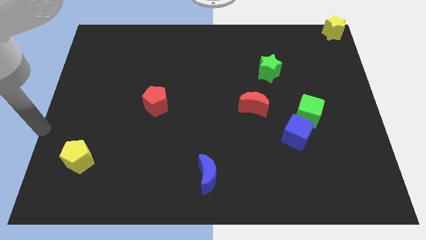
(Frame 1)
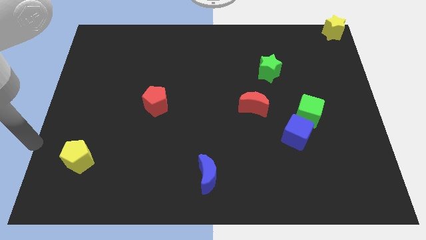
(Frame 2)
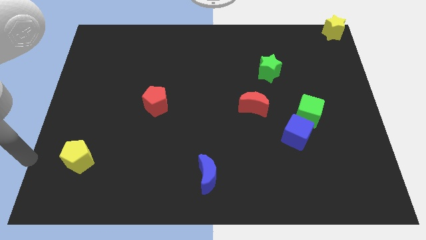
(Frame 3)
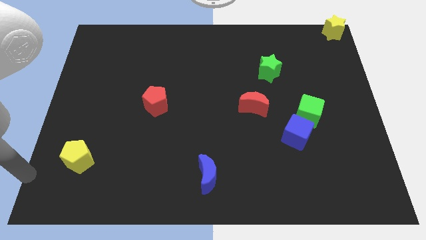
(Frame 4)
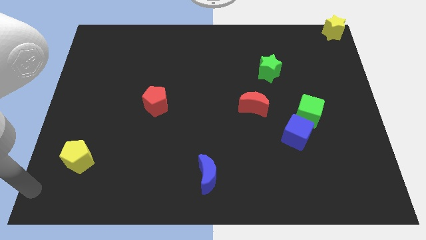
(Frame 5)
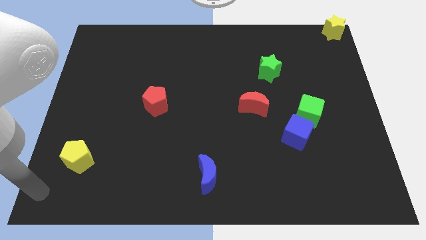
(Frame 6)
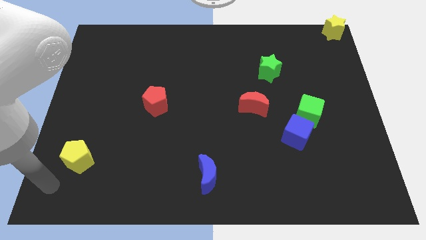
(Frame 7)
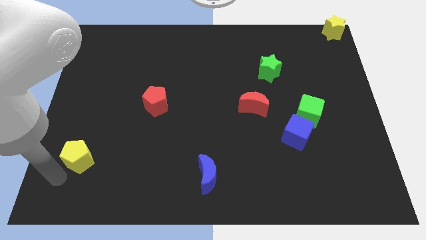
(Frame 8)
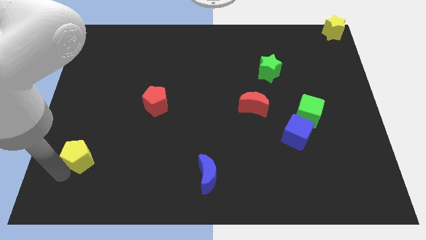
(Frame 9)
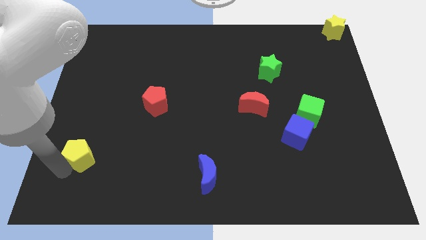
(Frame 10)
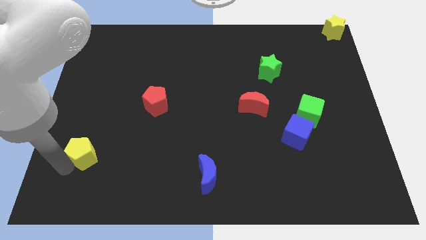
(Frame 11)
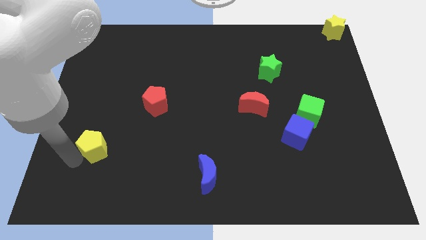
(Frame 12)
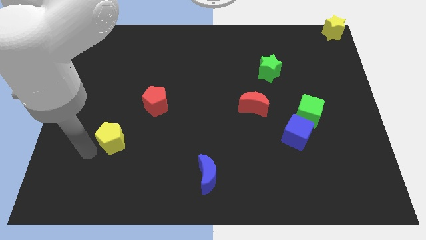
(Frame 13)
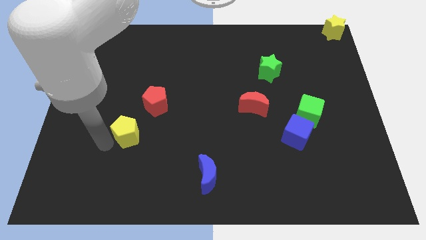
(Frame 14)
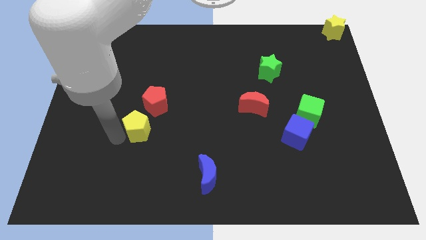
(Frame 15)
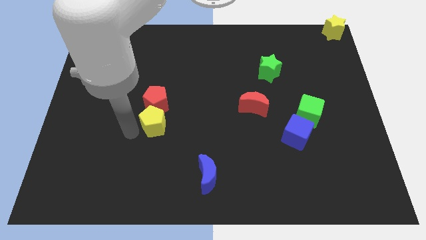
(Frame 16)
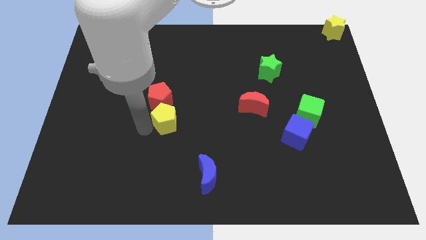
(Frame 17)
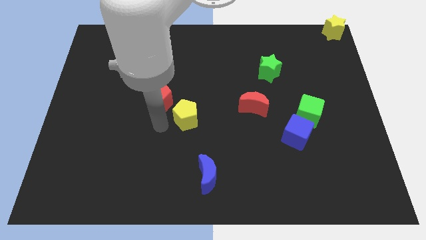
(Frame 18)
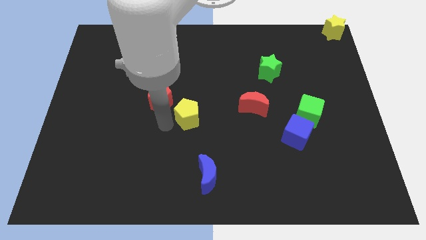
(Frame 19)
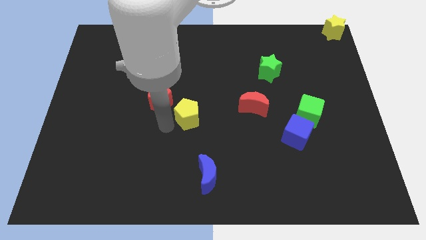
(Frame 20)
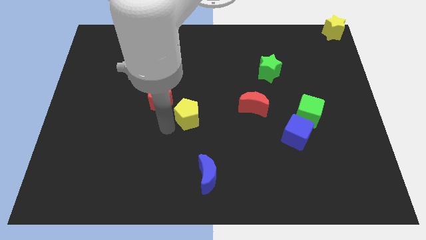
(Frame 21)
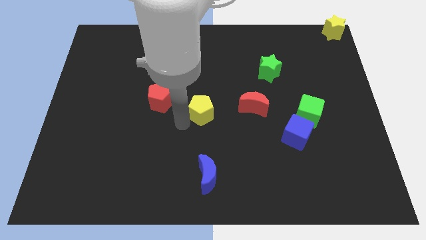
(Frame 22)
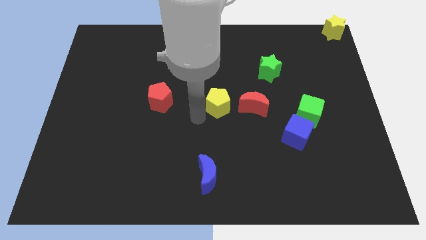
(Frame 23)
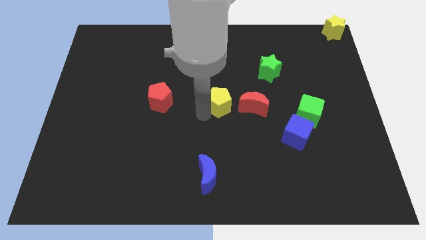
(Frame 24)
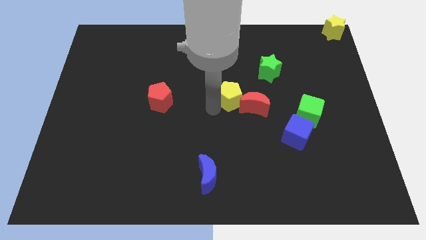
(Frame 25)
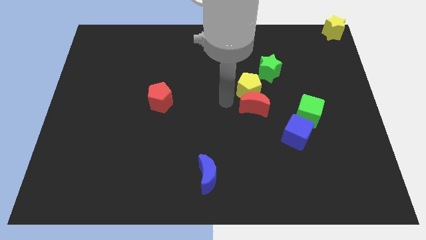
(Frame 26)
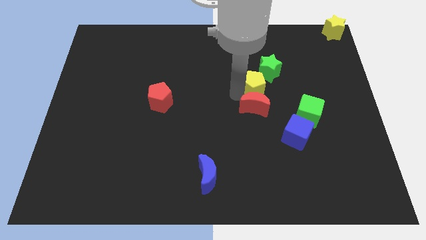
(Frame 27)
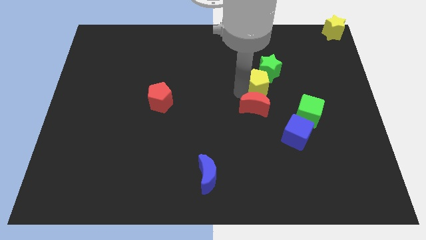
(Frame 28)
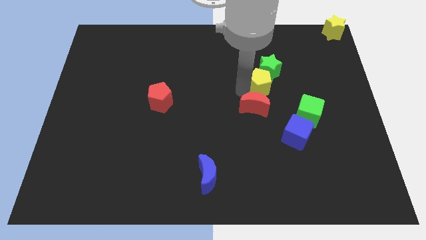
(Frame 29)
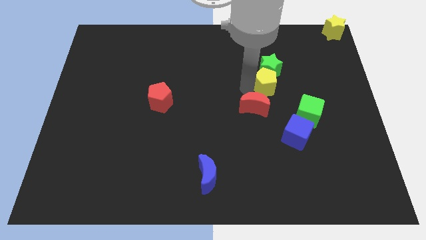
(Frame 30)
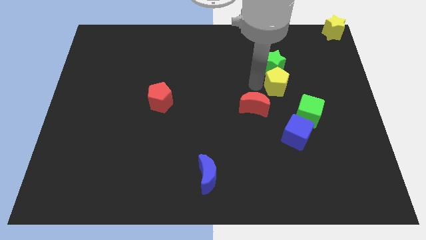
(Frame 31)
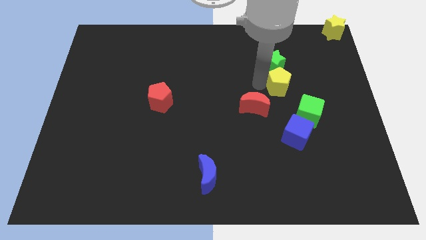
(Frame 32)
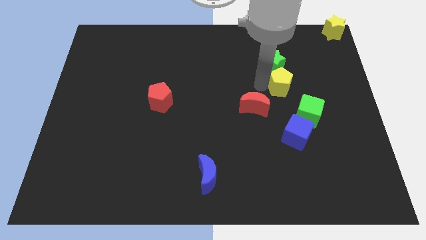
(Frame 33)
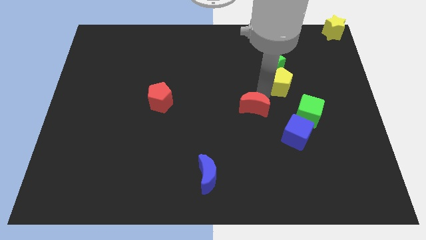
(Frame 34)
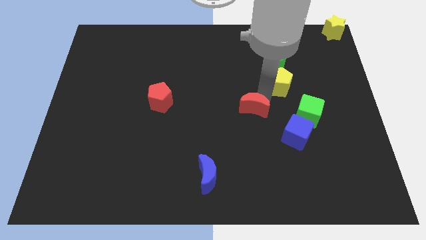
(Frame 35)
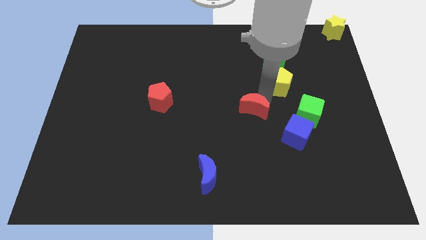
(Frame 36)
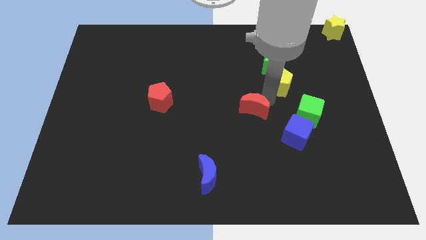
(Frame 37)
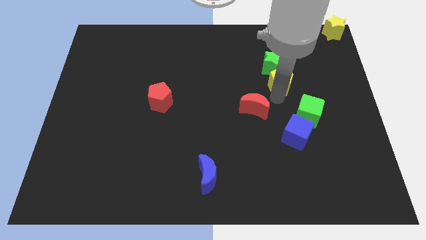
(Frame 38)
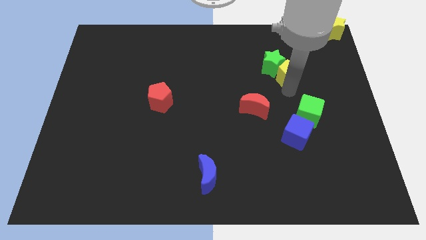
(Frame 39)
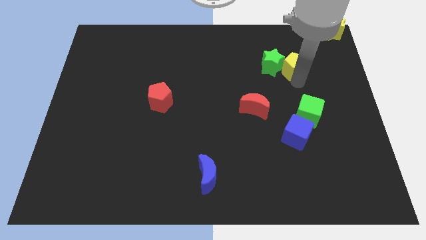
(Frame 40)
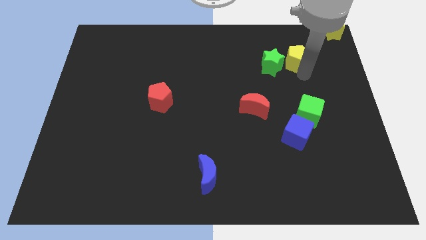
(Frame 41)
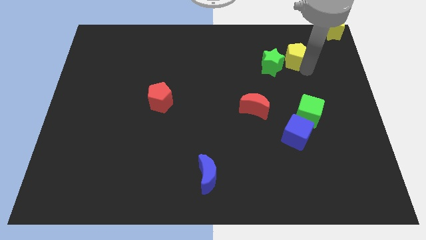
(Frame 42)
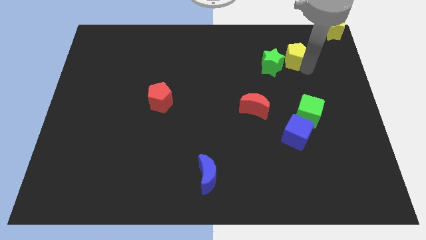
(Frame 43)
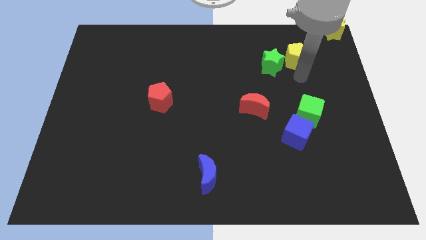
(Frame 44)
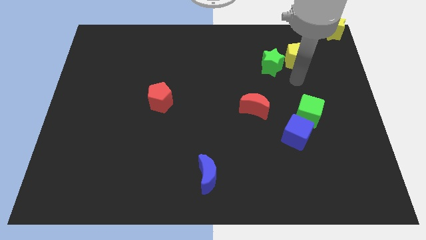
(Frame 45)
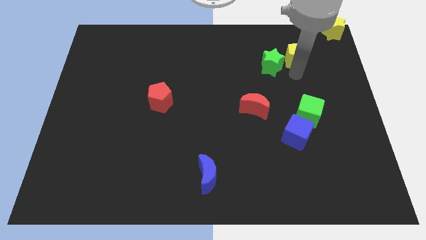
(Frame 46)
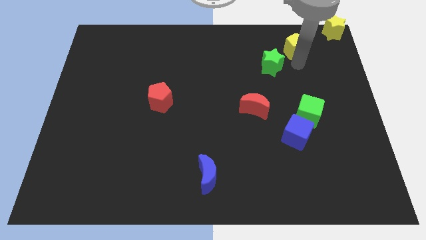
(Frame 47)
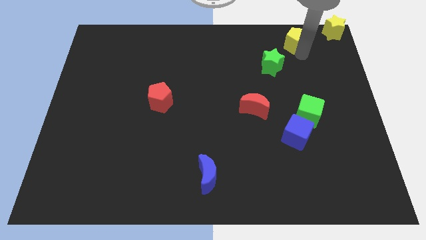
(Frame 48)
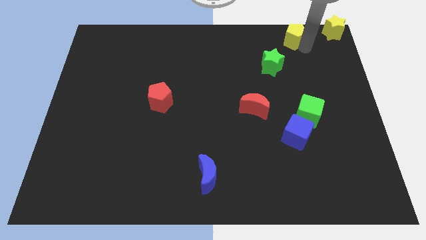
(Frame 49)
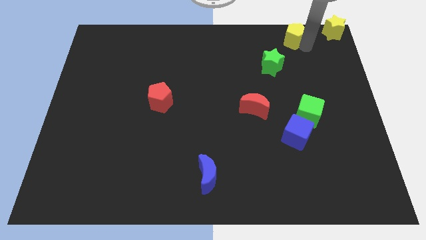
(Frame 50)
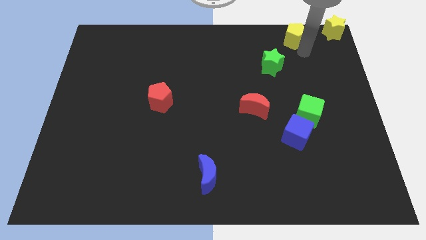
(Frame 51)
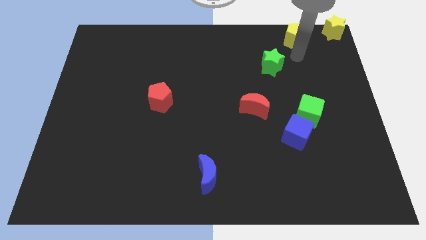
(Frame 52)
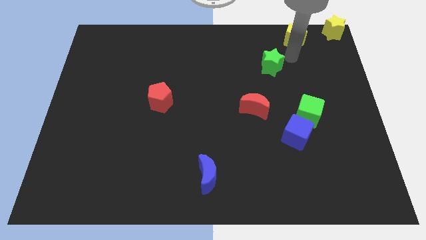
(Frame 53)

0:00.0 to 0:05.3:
push yellow pentagon to the left of the yellow star

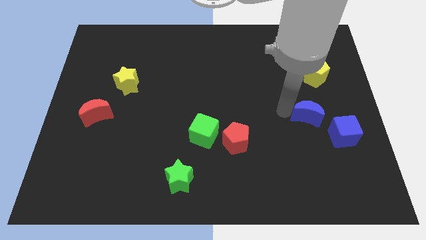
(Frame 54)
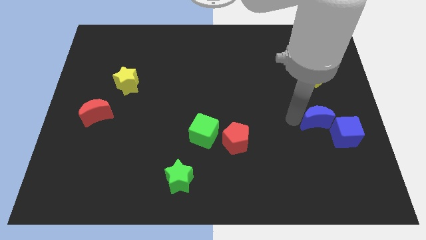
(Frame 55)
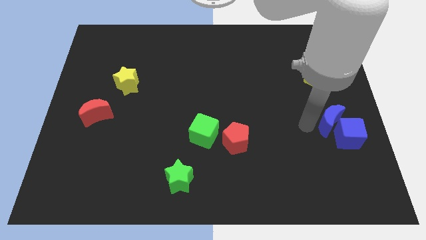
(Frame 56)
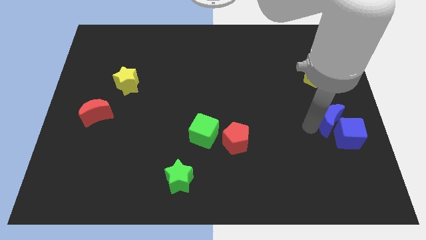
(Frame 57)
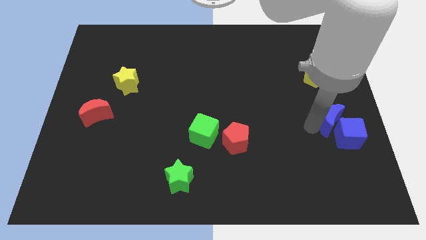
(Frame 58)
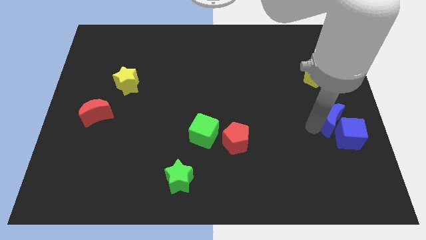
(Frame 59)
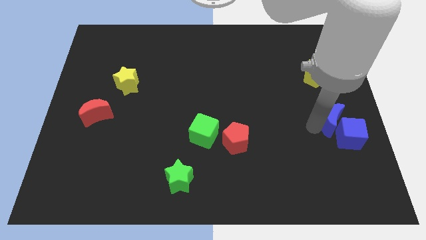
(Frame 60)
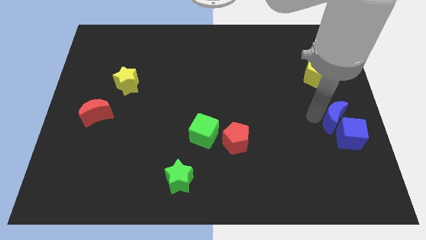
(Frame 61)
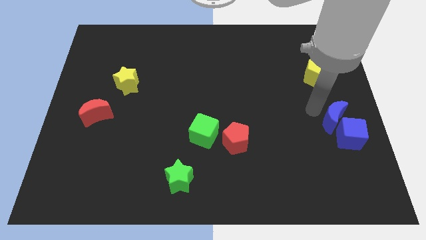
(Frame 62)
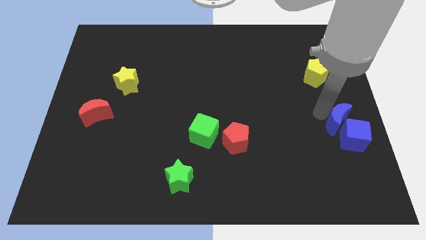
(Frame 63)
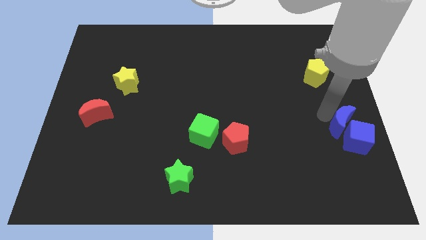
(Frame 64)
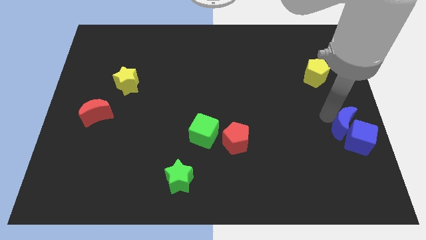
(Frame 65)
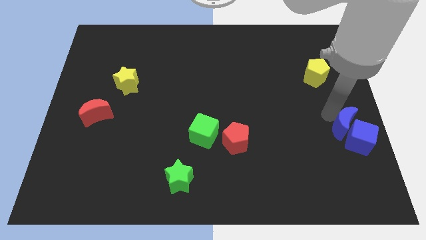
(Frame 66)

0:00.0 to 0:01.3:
push blue moon into blue cube

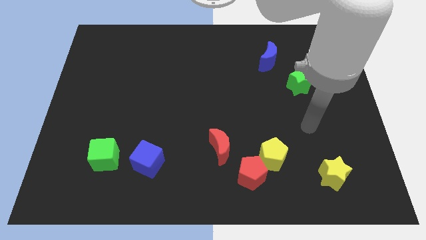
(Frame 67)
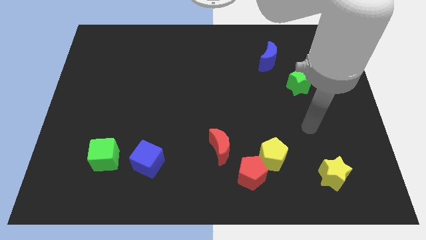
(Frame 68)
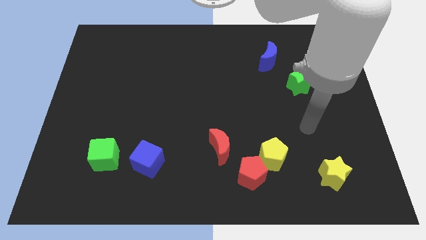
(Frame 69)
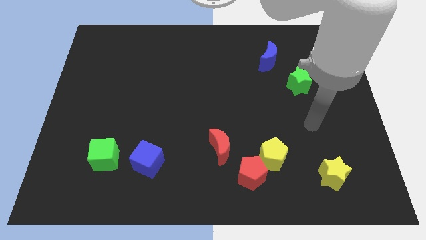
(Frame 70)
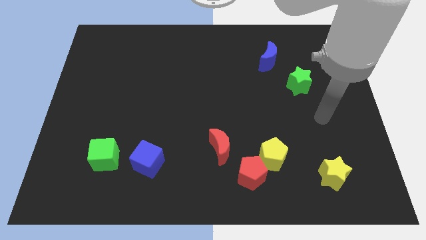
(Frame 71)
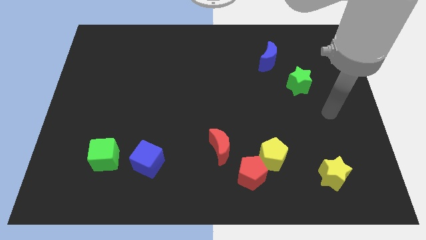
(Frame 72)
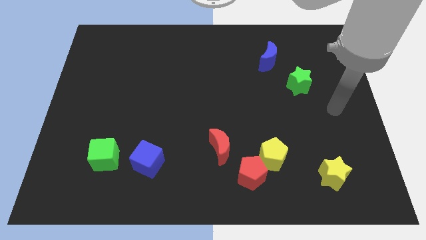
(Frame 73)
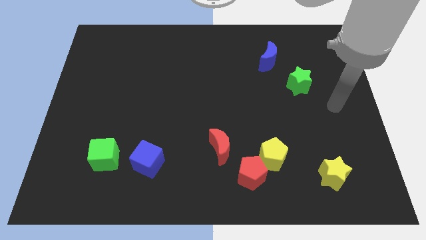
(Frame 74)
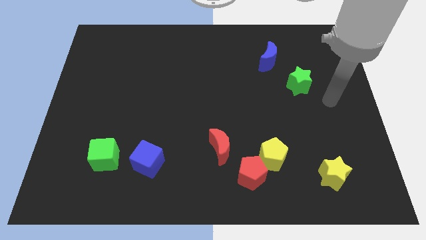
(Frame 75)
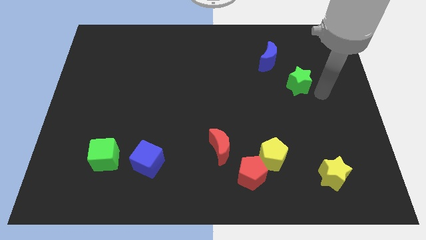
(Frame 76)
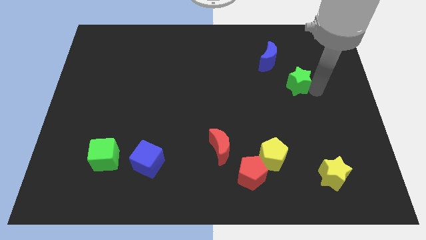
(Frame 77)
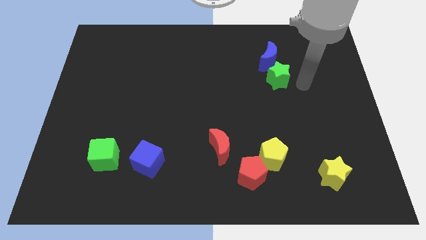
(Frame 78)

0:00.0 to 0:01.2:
go and push the green star close to the blue crescent

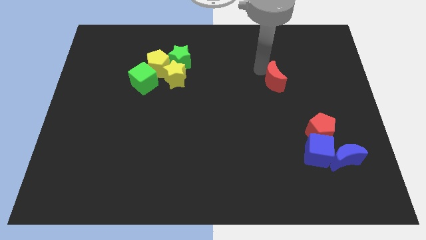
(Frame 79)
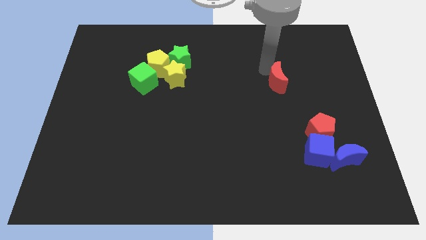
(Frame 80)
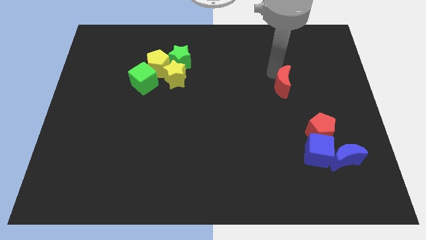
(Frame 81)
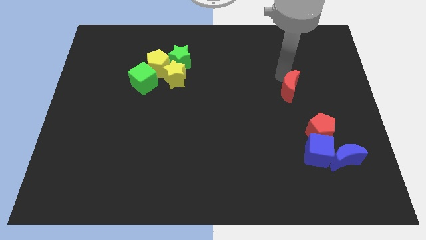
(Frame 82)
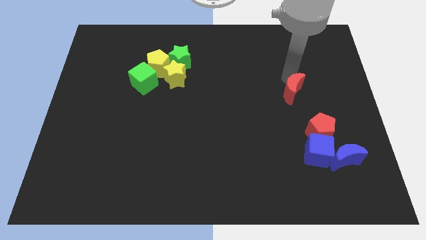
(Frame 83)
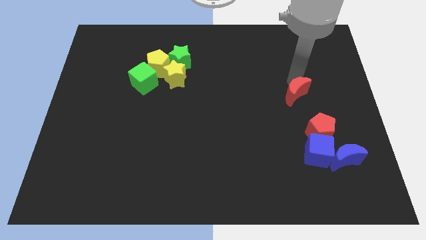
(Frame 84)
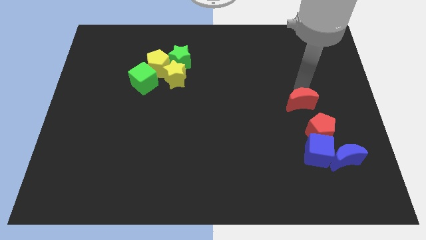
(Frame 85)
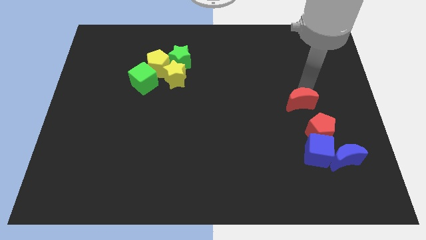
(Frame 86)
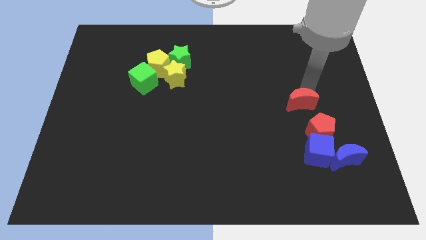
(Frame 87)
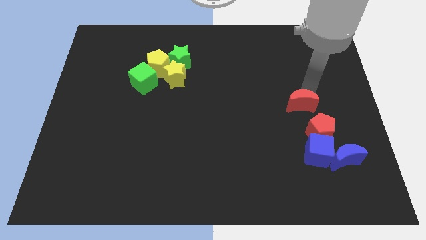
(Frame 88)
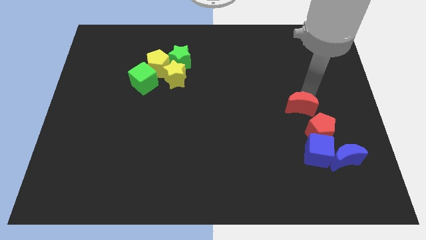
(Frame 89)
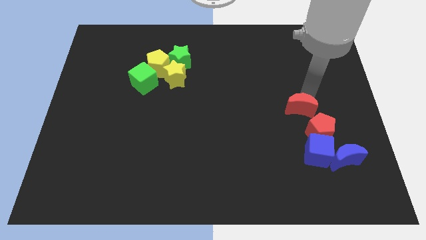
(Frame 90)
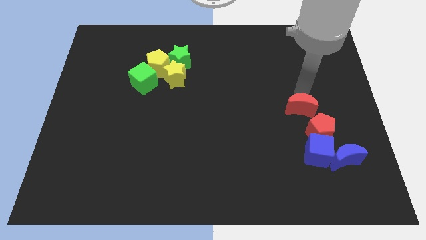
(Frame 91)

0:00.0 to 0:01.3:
move red moon close to the red pentagon
